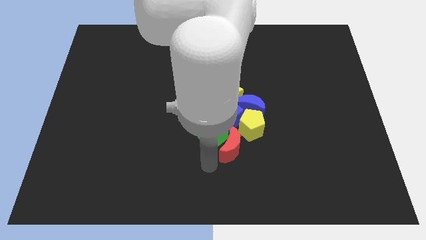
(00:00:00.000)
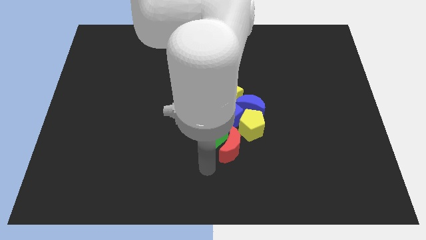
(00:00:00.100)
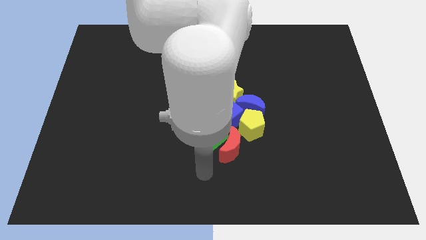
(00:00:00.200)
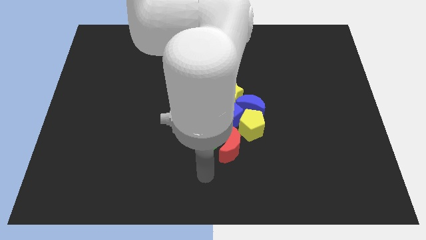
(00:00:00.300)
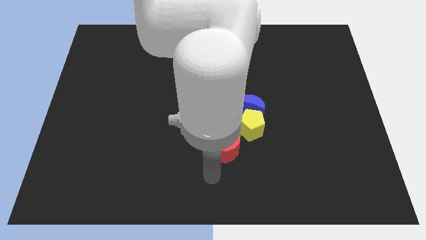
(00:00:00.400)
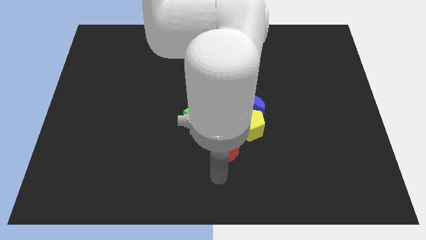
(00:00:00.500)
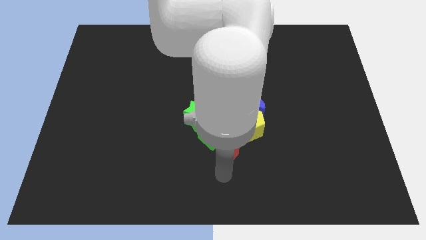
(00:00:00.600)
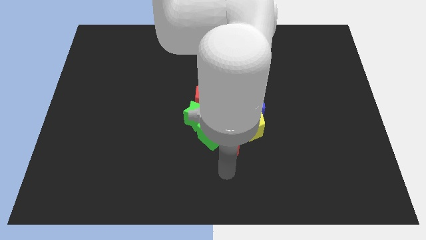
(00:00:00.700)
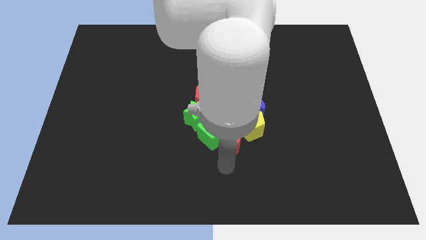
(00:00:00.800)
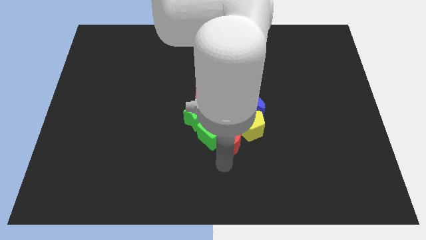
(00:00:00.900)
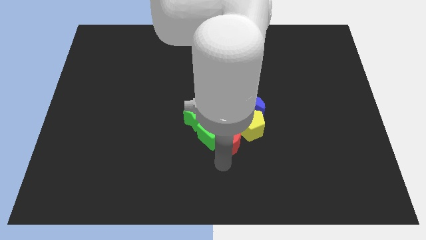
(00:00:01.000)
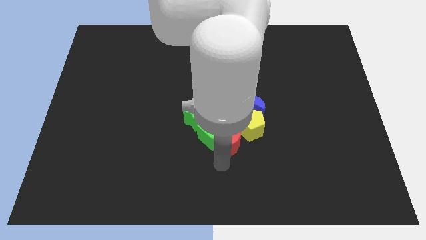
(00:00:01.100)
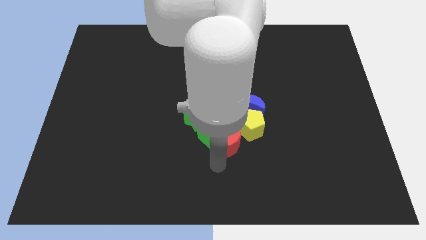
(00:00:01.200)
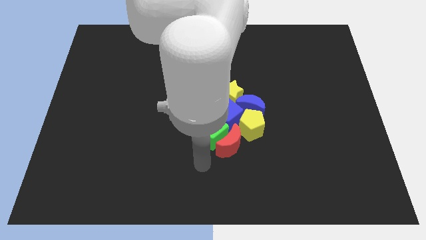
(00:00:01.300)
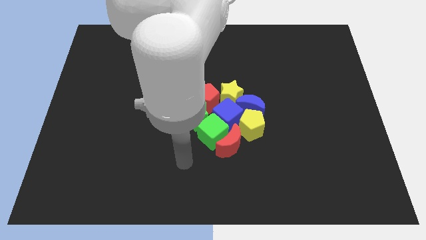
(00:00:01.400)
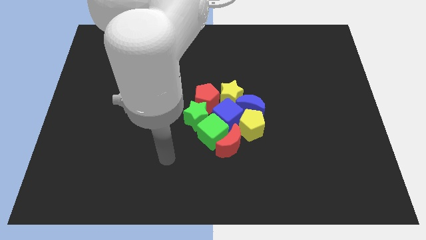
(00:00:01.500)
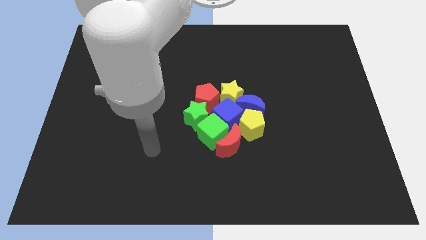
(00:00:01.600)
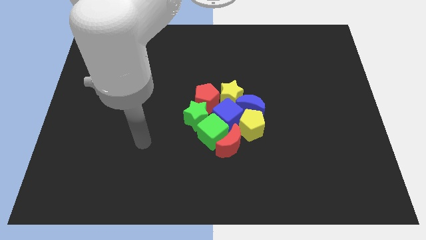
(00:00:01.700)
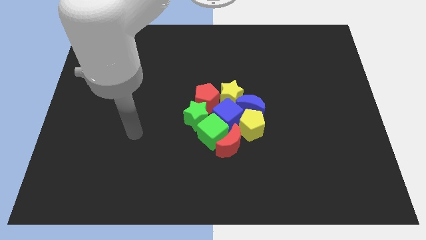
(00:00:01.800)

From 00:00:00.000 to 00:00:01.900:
adjust the red crescent into the group from the bottom

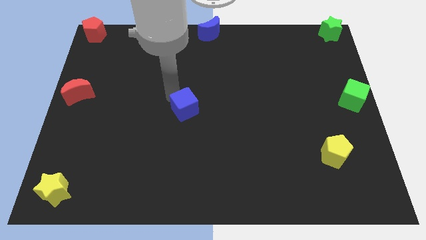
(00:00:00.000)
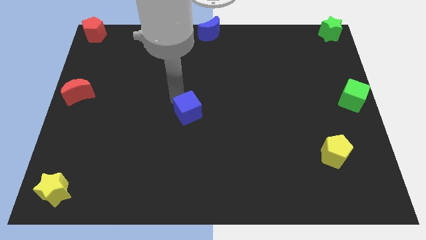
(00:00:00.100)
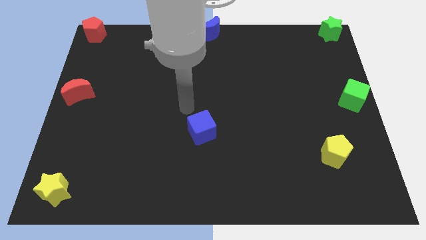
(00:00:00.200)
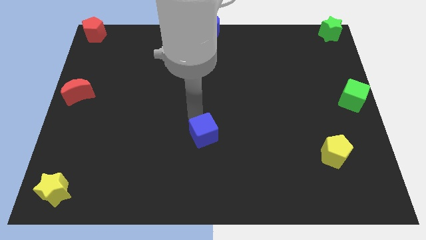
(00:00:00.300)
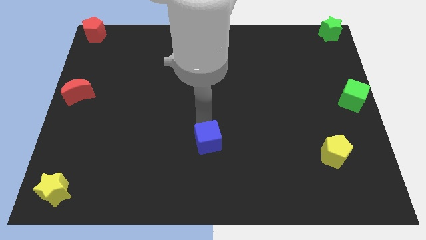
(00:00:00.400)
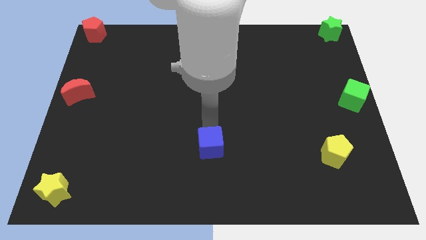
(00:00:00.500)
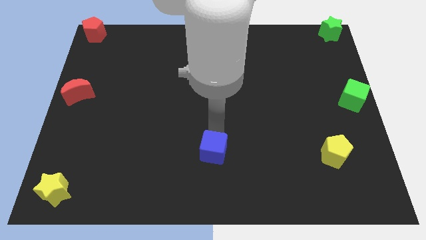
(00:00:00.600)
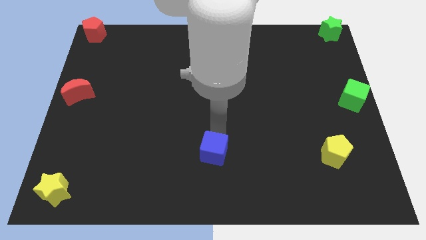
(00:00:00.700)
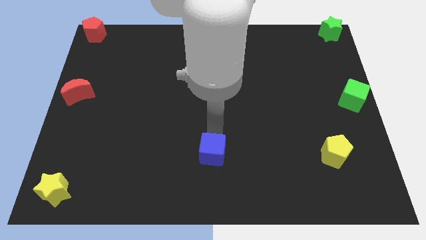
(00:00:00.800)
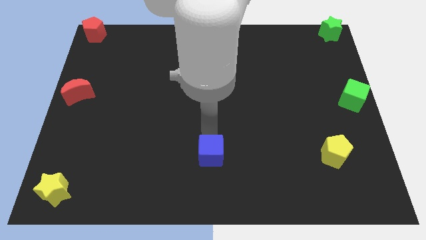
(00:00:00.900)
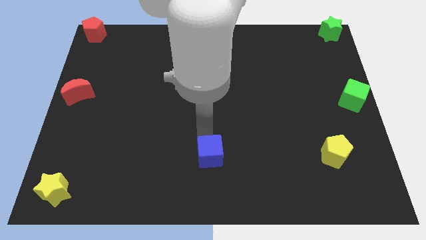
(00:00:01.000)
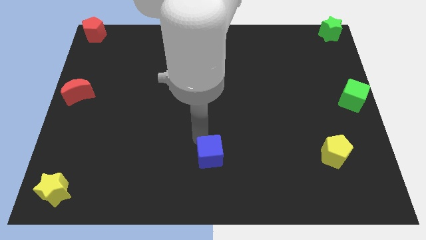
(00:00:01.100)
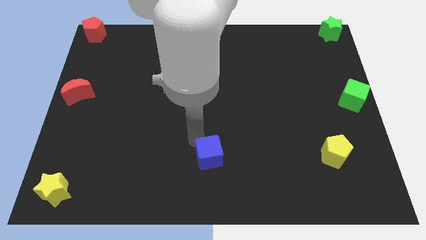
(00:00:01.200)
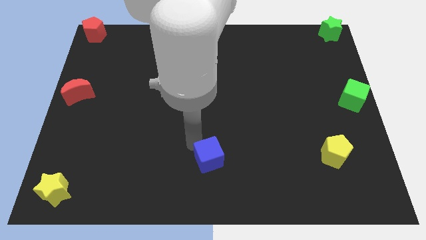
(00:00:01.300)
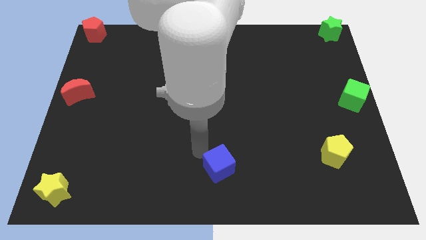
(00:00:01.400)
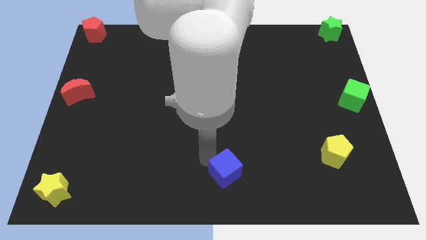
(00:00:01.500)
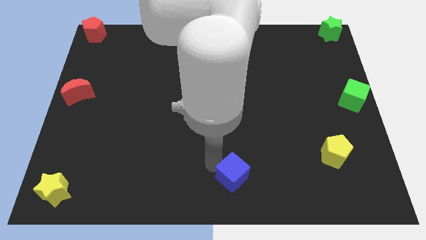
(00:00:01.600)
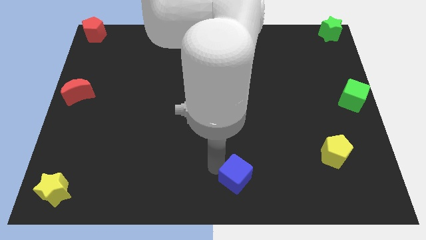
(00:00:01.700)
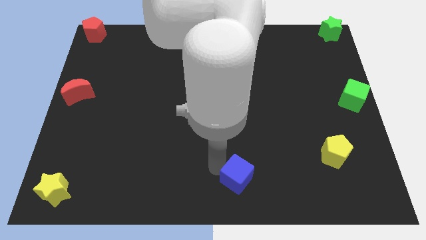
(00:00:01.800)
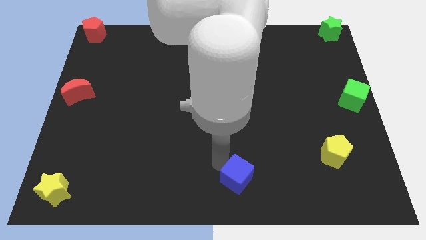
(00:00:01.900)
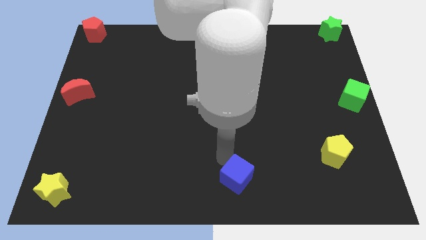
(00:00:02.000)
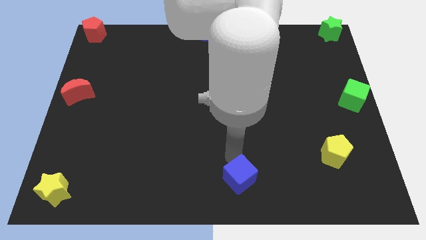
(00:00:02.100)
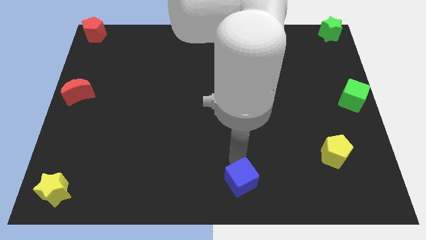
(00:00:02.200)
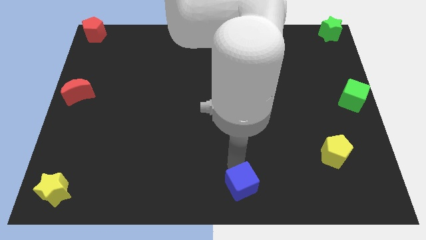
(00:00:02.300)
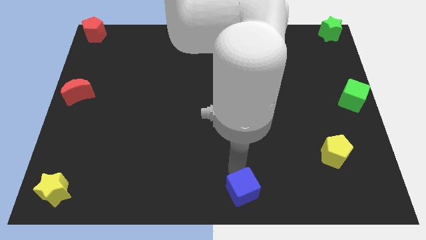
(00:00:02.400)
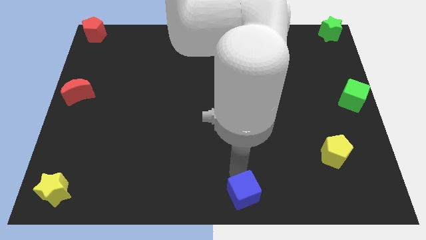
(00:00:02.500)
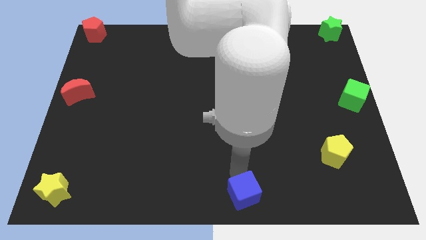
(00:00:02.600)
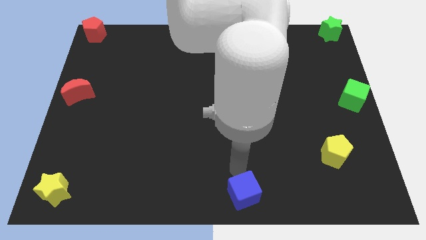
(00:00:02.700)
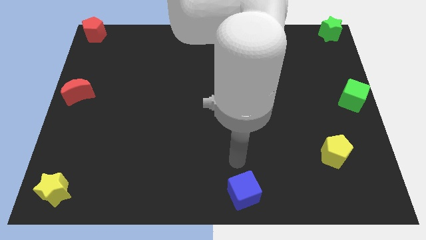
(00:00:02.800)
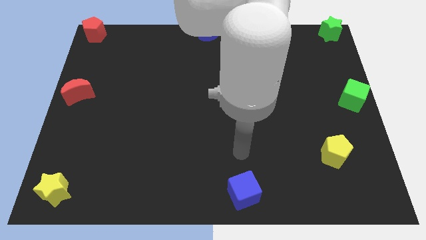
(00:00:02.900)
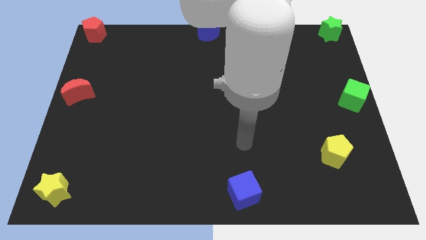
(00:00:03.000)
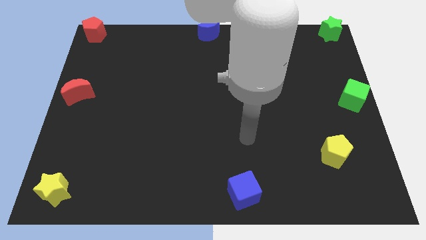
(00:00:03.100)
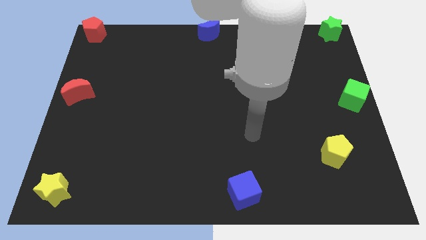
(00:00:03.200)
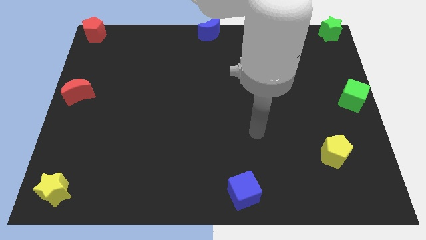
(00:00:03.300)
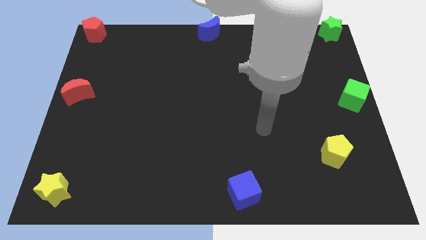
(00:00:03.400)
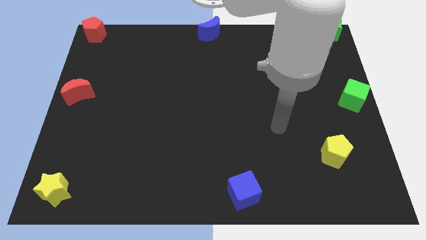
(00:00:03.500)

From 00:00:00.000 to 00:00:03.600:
place blue cube at the bottom center of the board

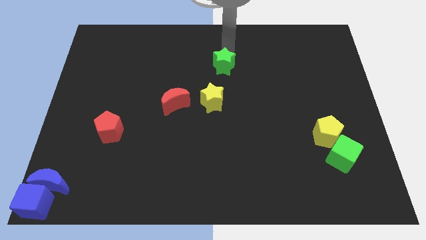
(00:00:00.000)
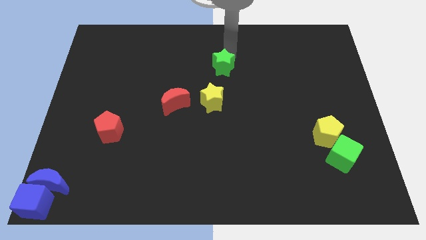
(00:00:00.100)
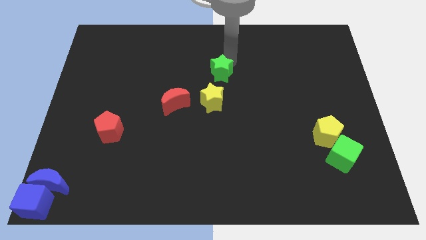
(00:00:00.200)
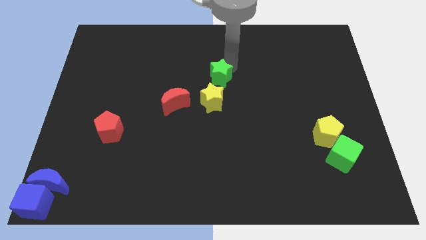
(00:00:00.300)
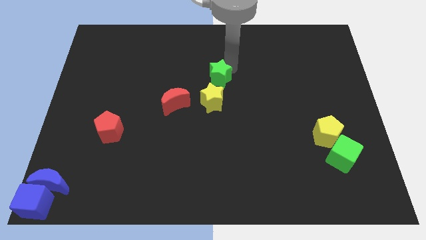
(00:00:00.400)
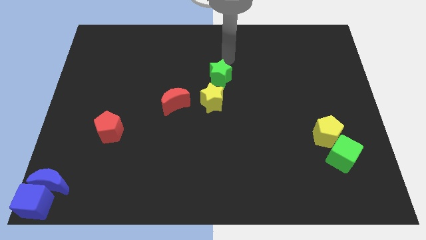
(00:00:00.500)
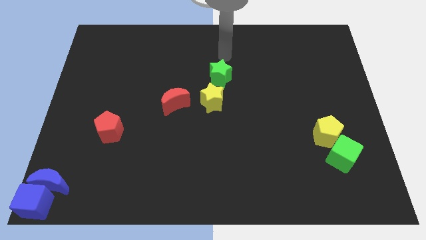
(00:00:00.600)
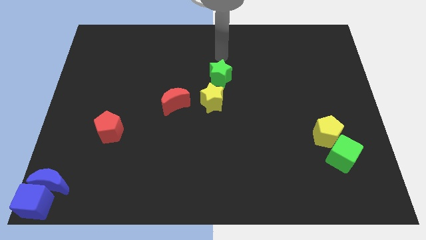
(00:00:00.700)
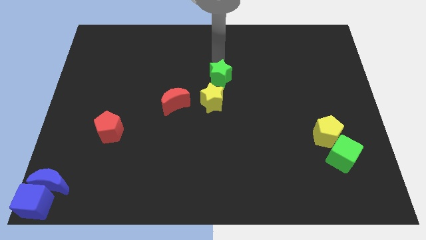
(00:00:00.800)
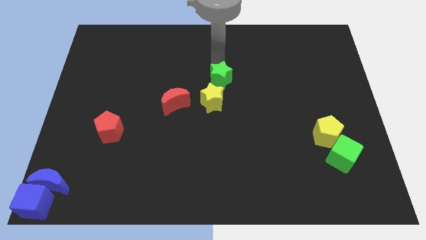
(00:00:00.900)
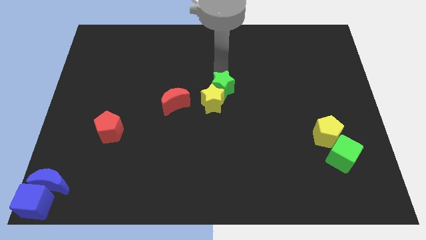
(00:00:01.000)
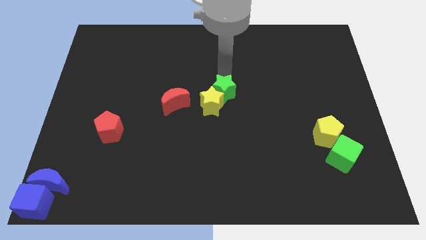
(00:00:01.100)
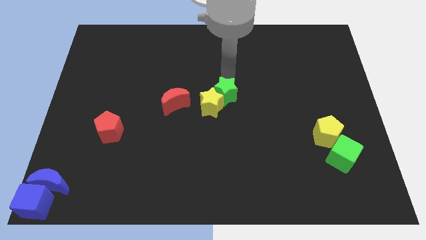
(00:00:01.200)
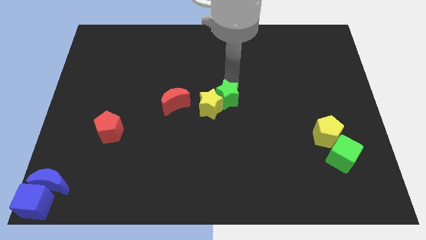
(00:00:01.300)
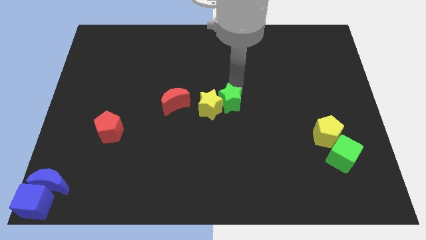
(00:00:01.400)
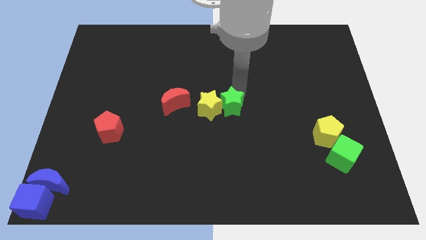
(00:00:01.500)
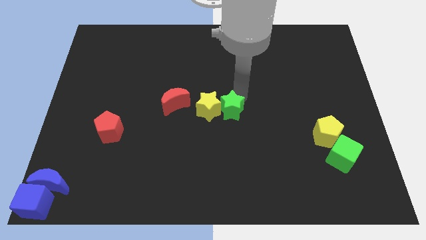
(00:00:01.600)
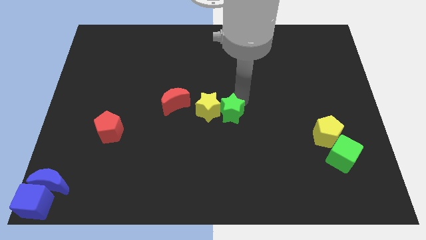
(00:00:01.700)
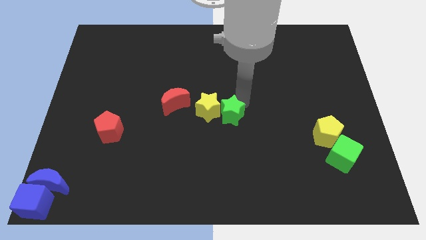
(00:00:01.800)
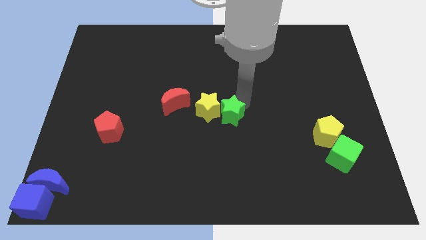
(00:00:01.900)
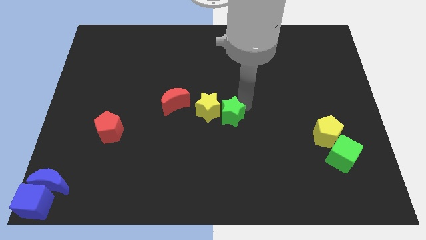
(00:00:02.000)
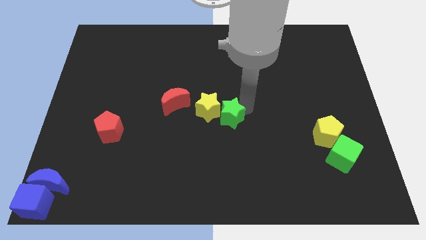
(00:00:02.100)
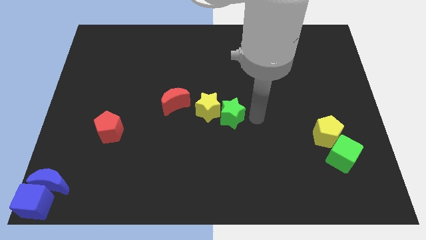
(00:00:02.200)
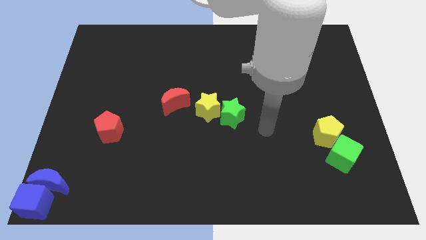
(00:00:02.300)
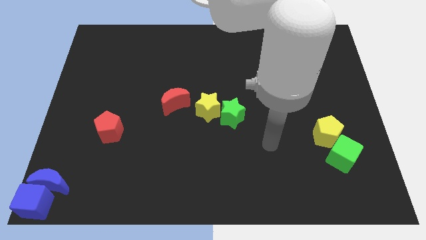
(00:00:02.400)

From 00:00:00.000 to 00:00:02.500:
push the green star with yellow star to the center

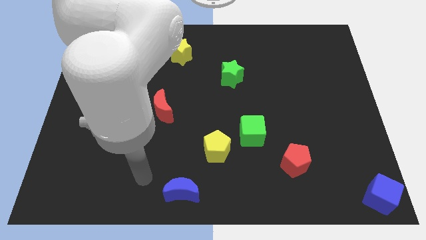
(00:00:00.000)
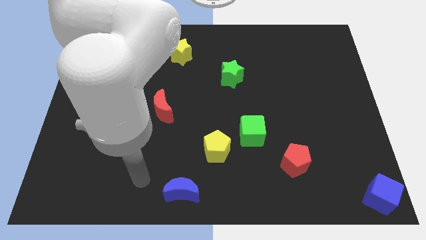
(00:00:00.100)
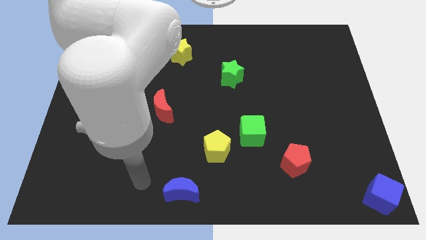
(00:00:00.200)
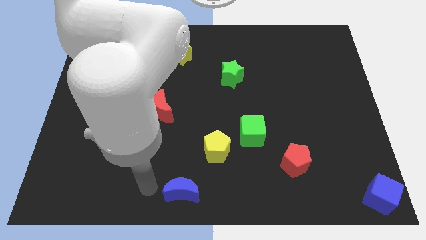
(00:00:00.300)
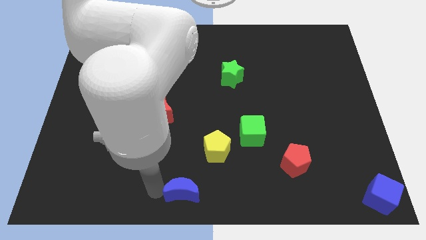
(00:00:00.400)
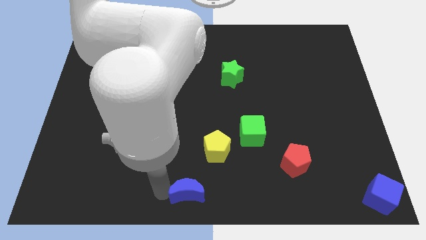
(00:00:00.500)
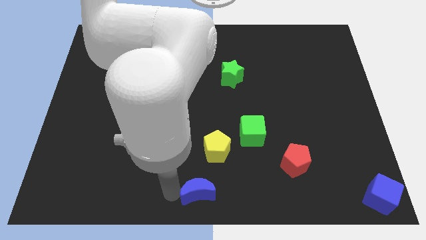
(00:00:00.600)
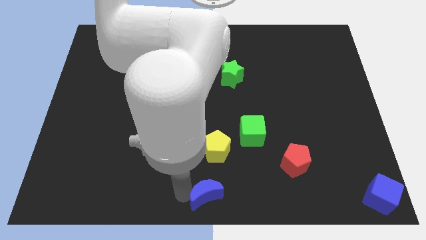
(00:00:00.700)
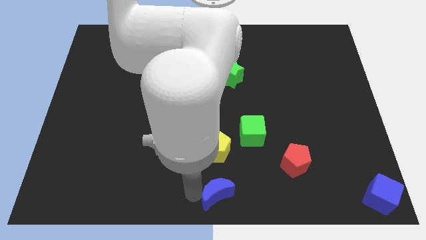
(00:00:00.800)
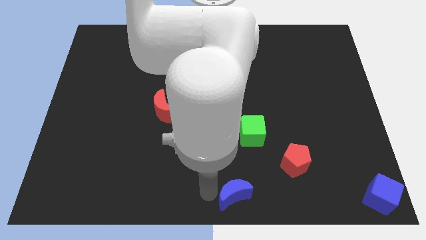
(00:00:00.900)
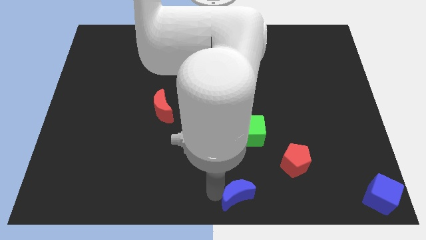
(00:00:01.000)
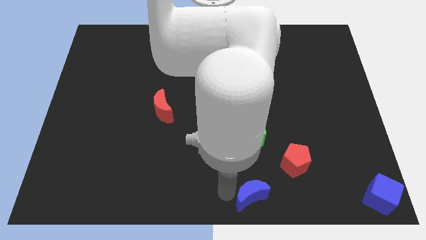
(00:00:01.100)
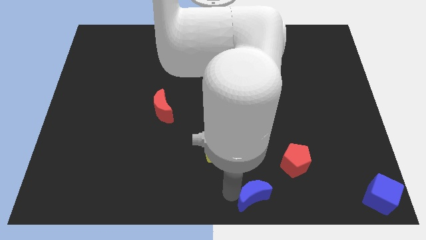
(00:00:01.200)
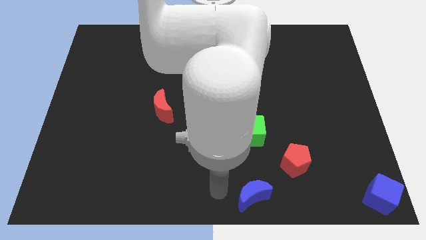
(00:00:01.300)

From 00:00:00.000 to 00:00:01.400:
place the blue crescent vertically below the green cube
